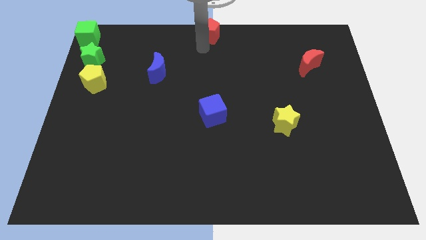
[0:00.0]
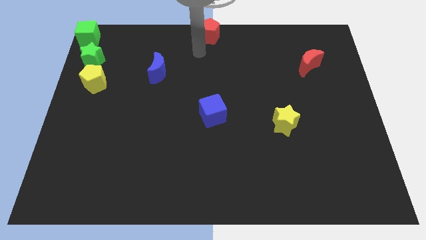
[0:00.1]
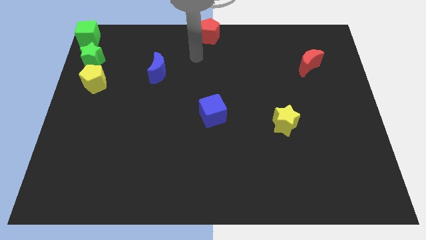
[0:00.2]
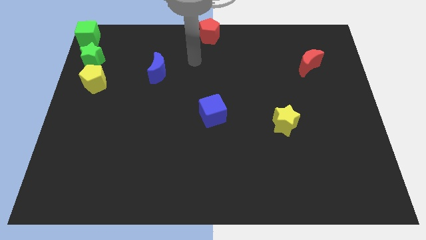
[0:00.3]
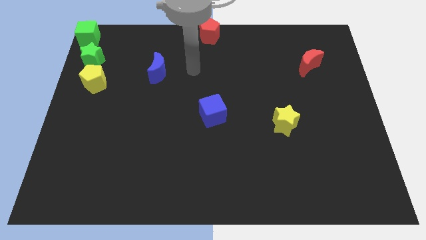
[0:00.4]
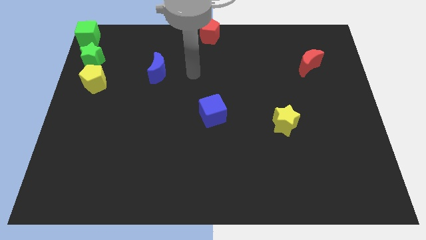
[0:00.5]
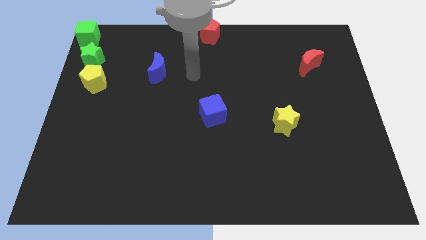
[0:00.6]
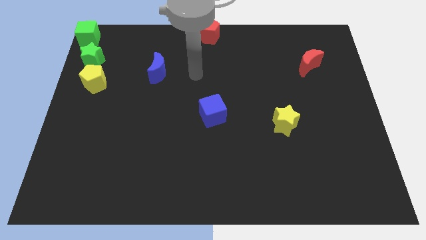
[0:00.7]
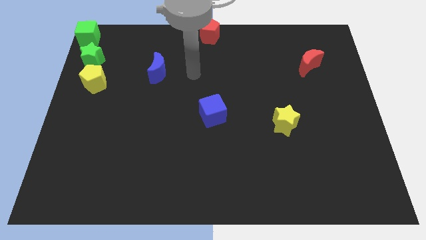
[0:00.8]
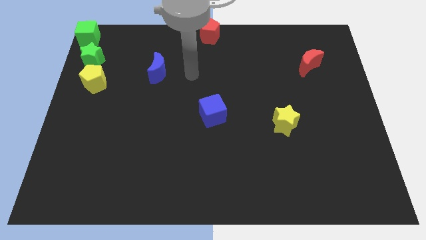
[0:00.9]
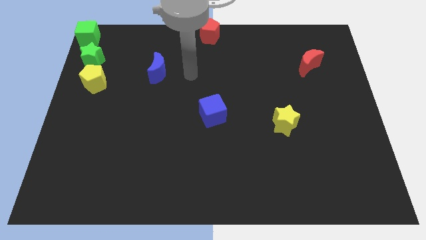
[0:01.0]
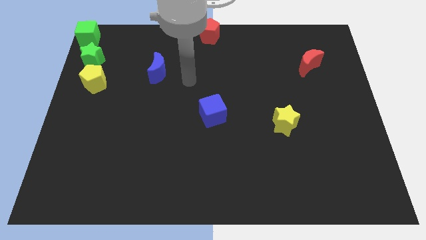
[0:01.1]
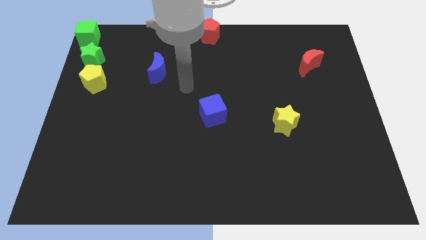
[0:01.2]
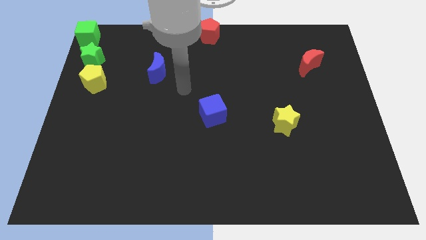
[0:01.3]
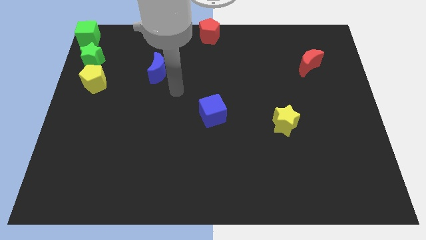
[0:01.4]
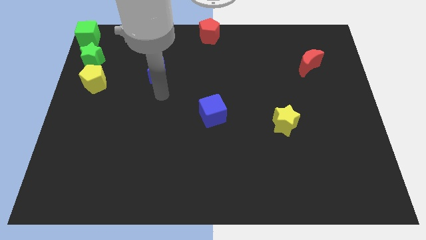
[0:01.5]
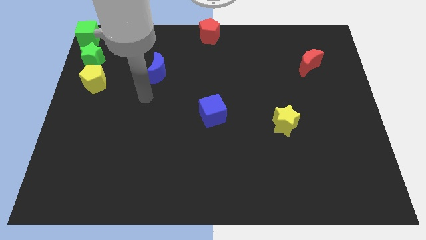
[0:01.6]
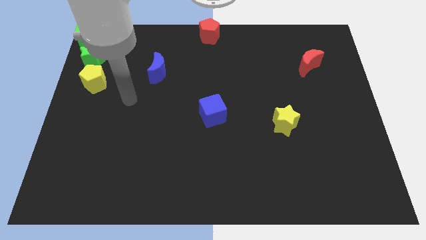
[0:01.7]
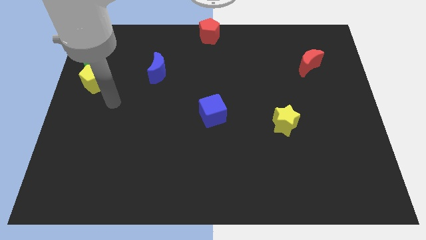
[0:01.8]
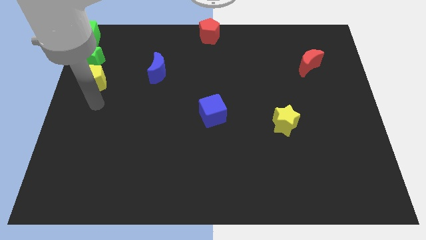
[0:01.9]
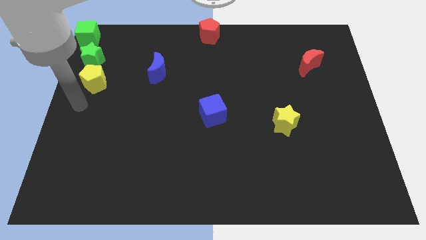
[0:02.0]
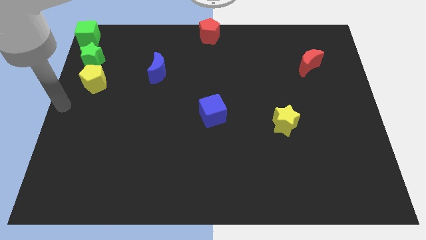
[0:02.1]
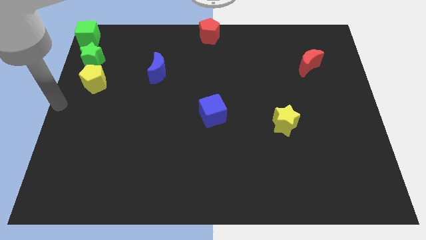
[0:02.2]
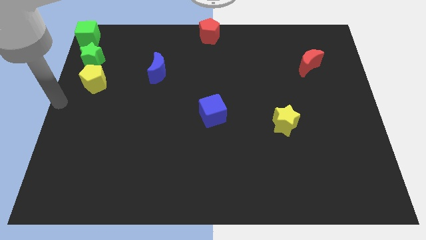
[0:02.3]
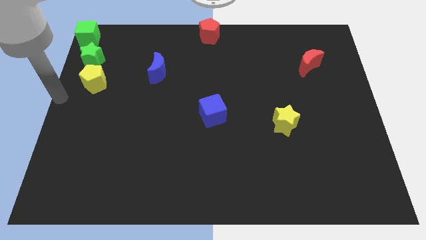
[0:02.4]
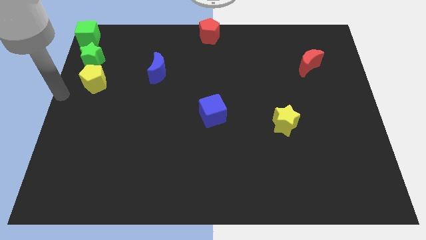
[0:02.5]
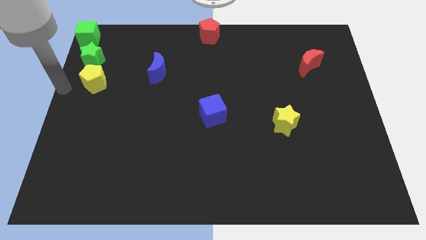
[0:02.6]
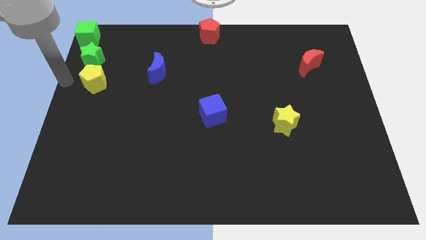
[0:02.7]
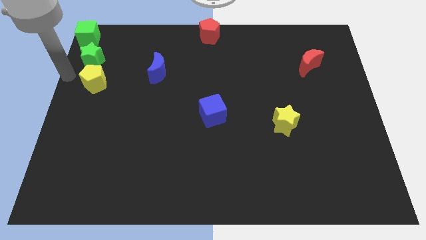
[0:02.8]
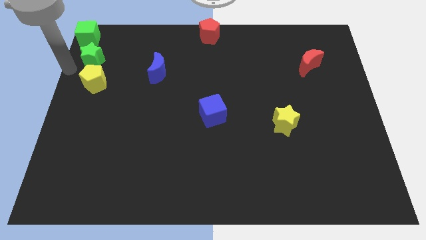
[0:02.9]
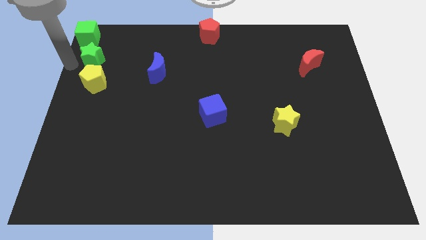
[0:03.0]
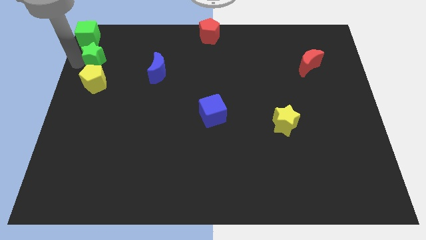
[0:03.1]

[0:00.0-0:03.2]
point your arm at the left side of the green star

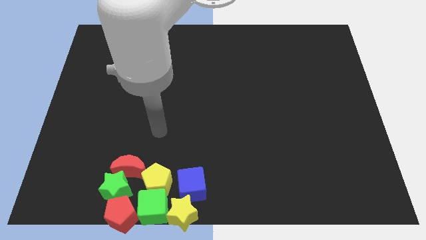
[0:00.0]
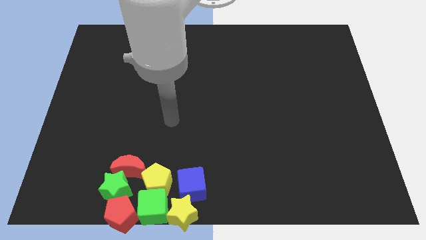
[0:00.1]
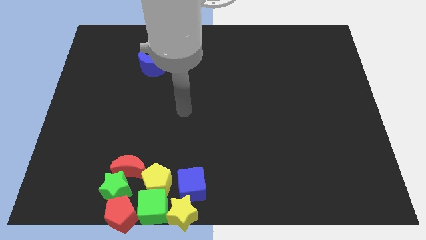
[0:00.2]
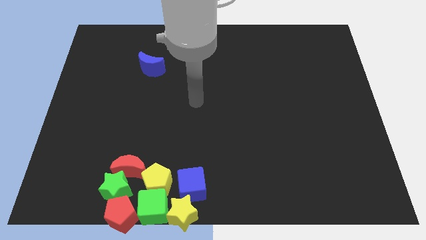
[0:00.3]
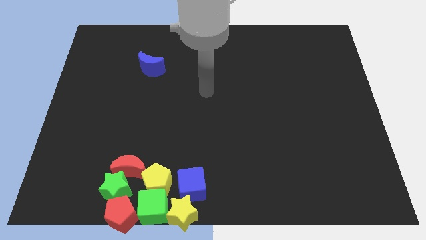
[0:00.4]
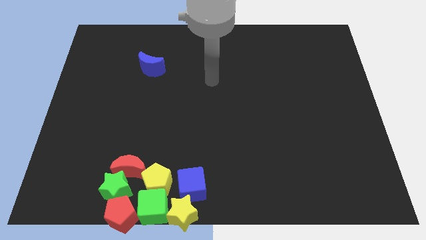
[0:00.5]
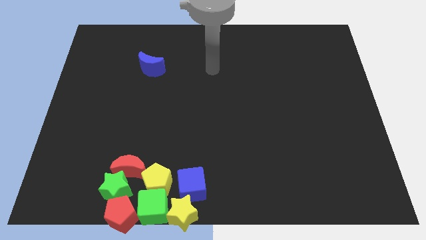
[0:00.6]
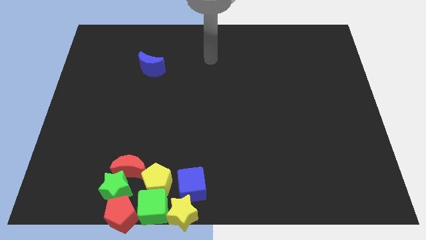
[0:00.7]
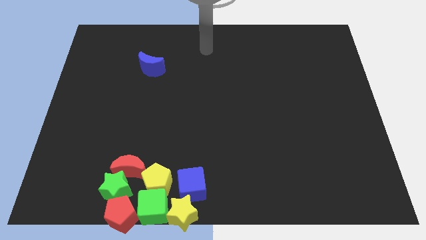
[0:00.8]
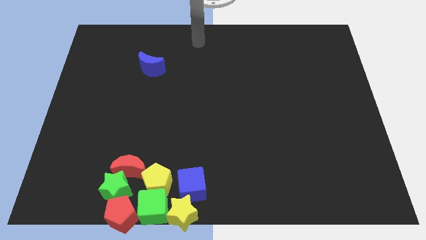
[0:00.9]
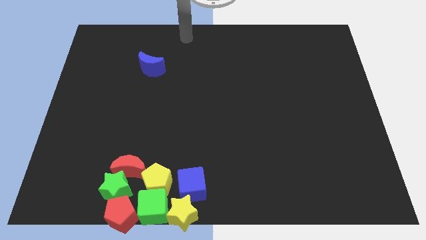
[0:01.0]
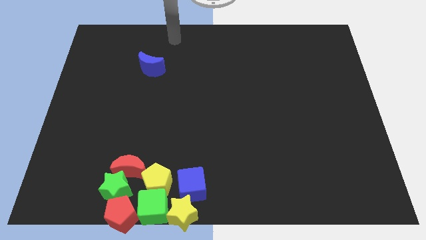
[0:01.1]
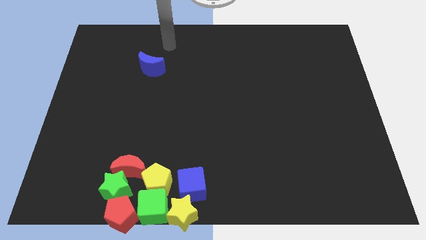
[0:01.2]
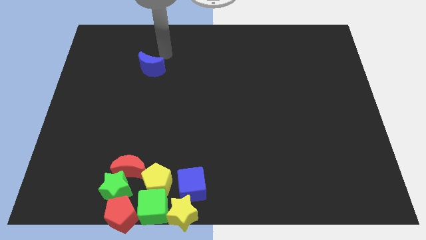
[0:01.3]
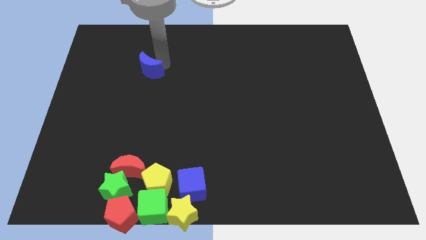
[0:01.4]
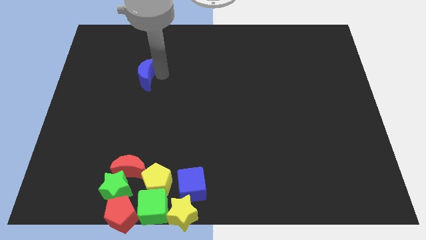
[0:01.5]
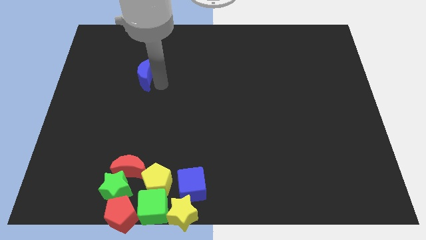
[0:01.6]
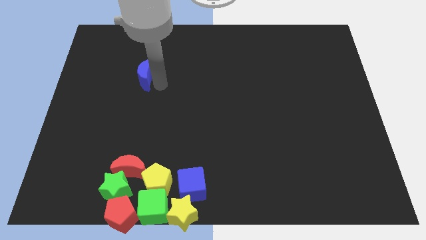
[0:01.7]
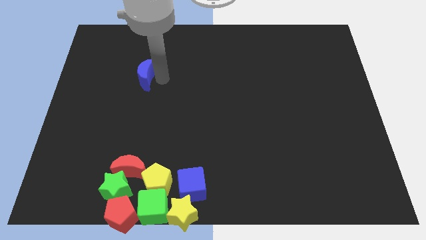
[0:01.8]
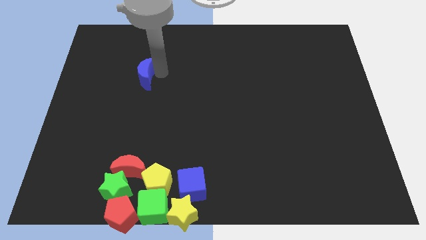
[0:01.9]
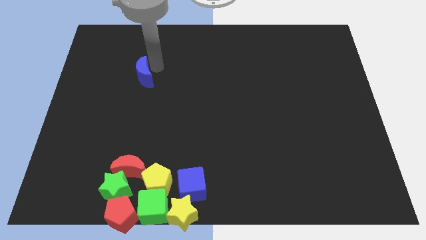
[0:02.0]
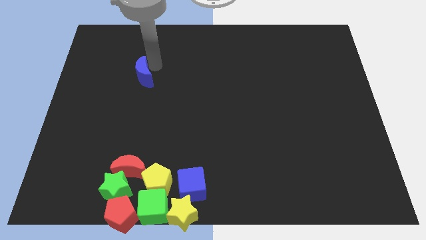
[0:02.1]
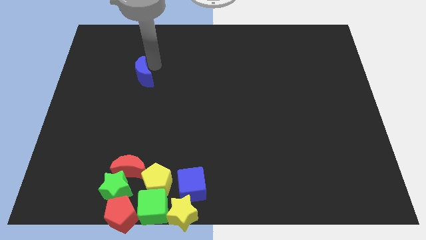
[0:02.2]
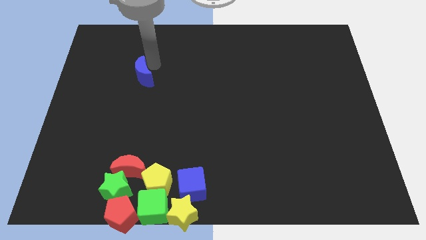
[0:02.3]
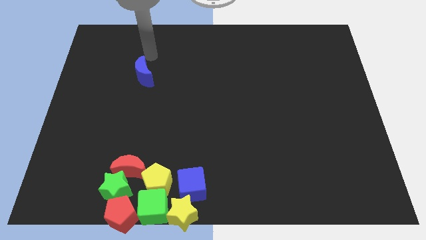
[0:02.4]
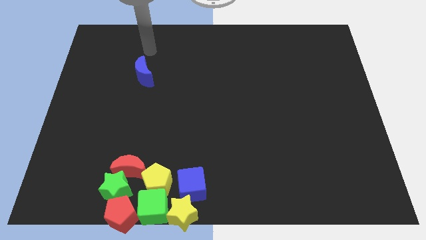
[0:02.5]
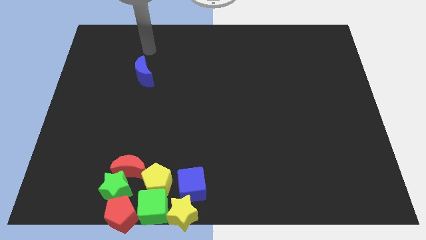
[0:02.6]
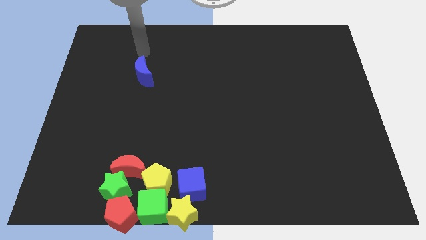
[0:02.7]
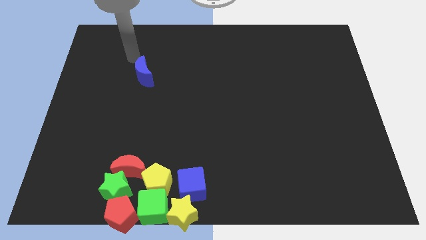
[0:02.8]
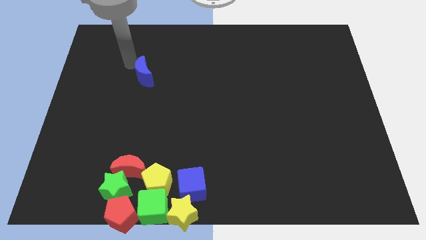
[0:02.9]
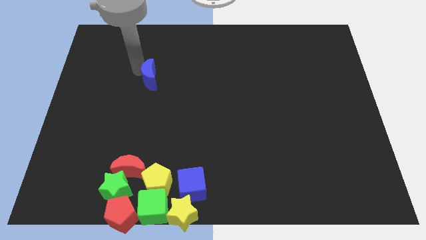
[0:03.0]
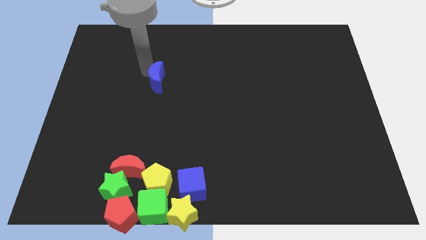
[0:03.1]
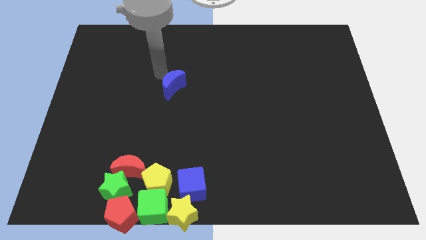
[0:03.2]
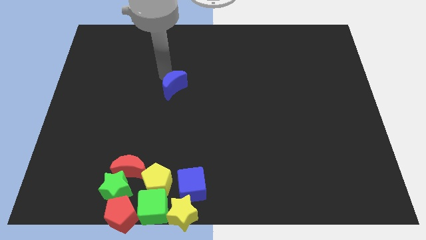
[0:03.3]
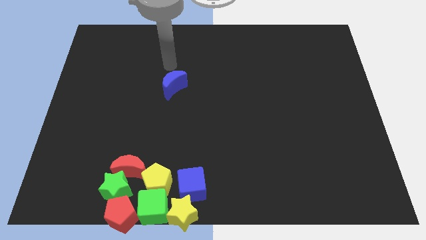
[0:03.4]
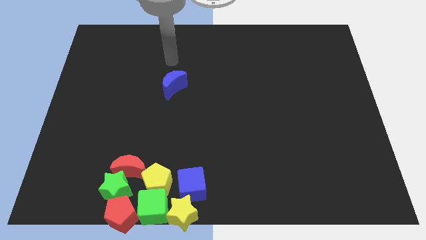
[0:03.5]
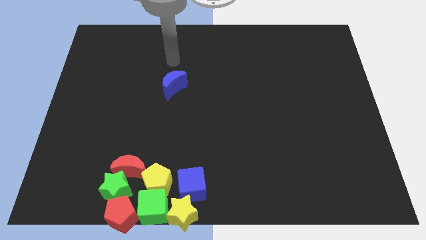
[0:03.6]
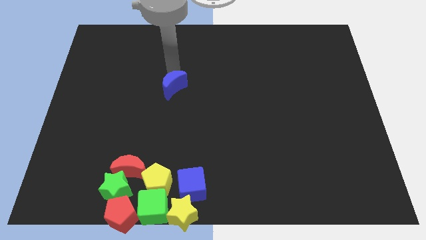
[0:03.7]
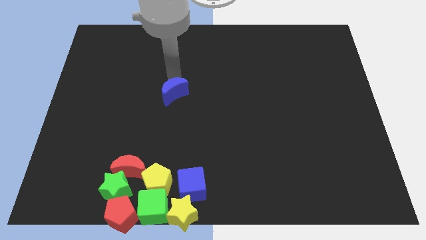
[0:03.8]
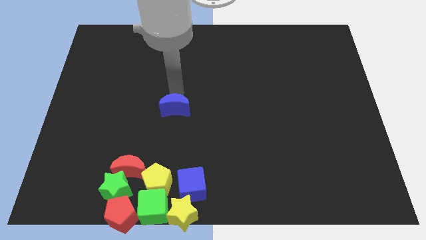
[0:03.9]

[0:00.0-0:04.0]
drag the blue moon towards the group of blocks

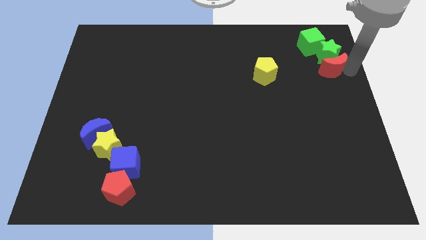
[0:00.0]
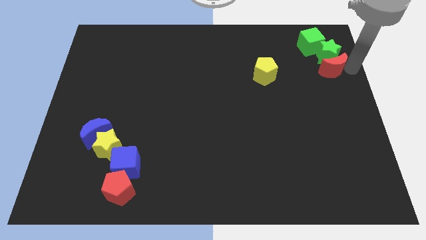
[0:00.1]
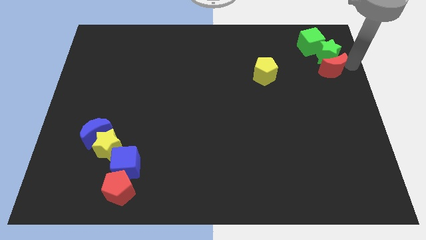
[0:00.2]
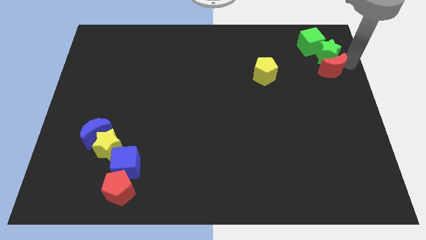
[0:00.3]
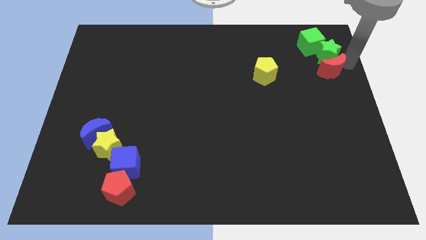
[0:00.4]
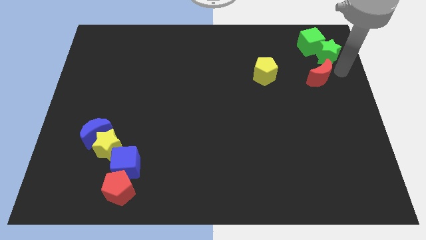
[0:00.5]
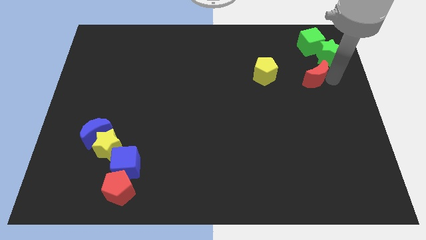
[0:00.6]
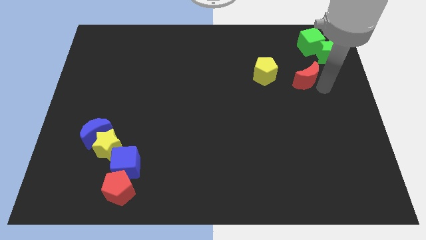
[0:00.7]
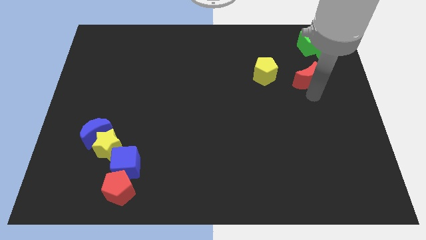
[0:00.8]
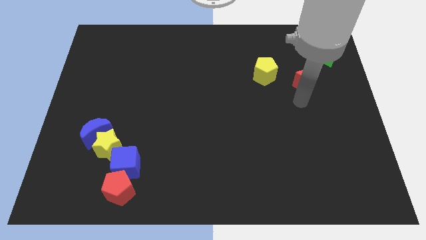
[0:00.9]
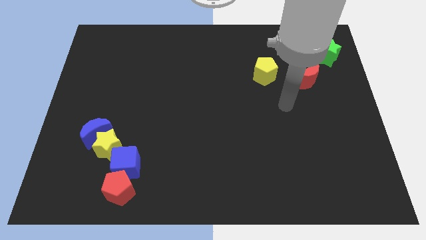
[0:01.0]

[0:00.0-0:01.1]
push the red crescent to the bottom left of the green star

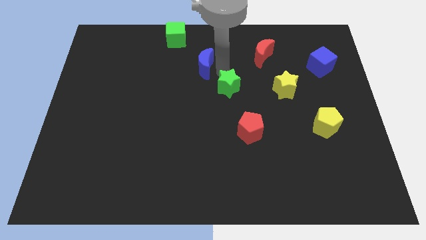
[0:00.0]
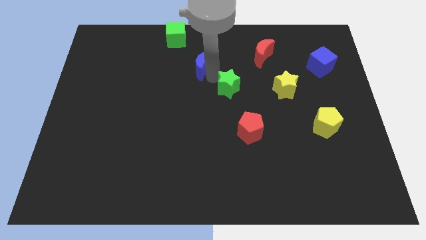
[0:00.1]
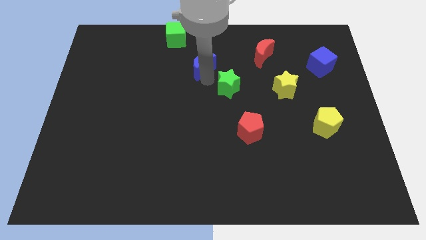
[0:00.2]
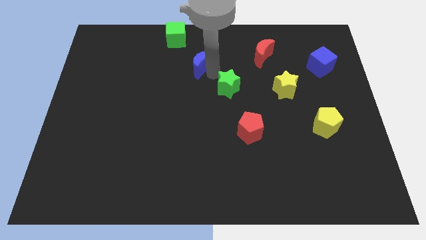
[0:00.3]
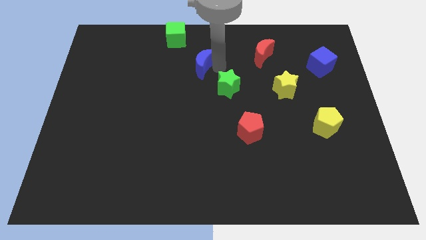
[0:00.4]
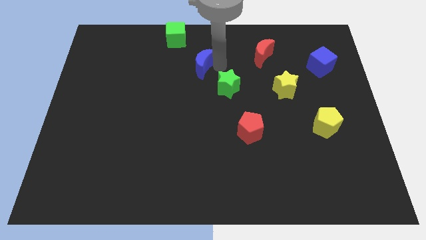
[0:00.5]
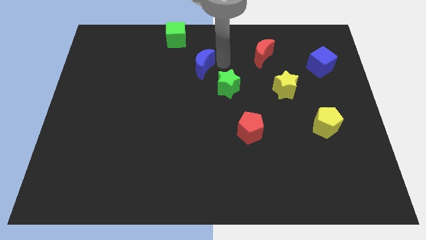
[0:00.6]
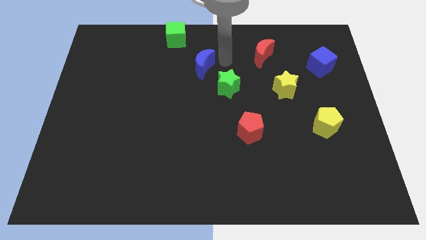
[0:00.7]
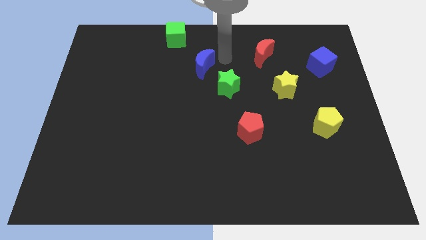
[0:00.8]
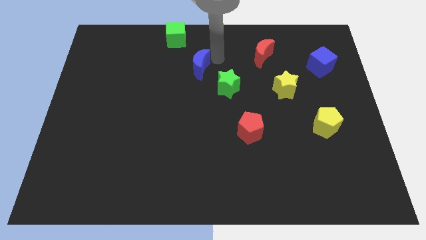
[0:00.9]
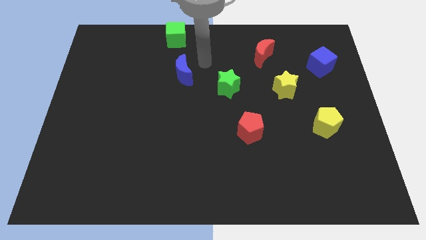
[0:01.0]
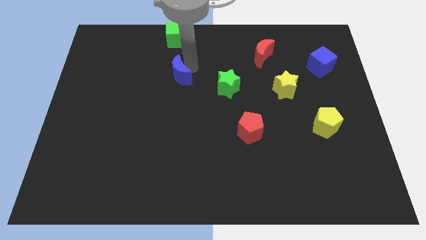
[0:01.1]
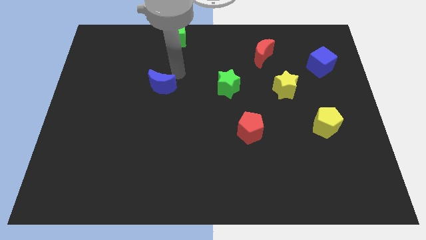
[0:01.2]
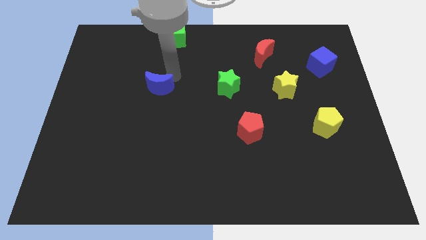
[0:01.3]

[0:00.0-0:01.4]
separate the blue crescent from green star
